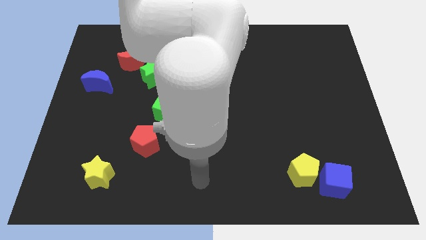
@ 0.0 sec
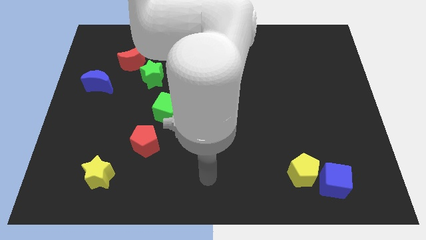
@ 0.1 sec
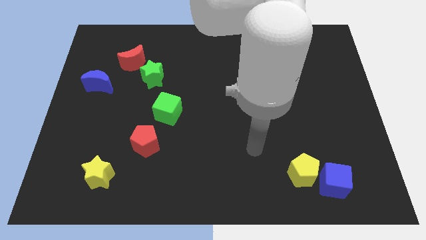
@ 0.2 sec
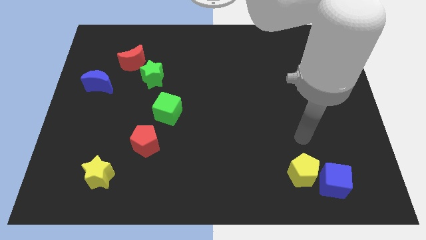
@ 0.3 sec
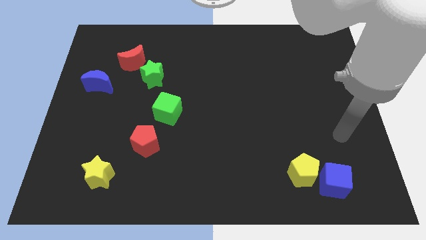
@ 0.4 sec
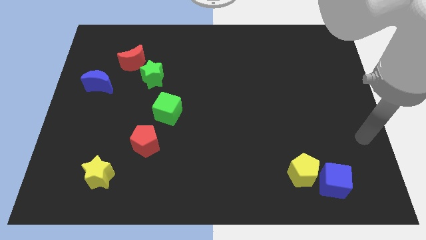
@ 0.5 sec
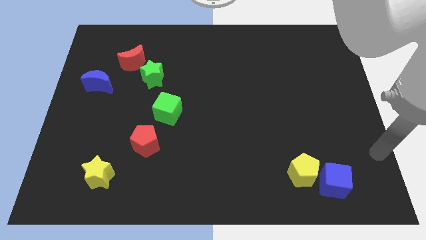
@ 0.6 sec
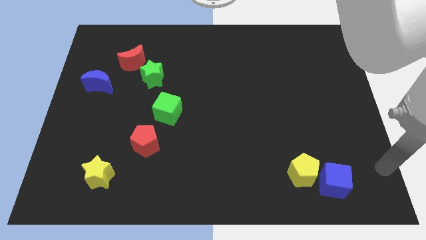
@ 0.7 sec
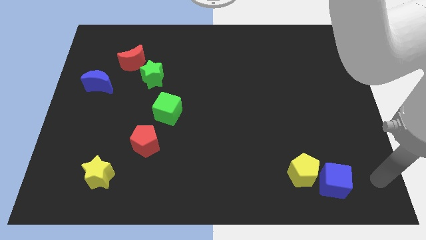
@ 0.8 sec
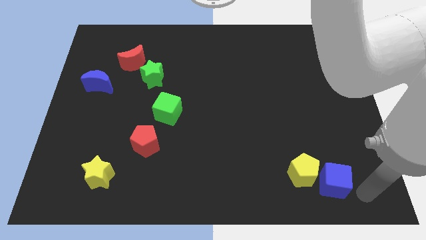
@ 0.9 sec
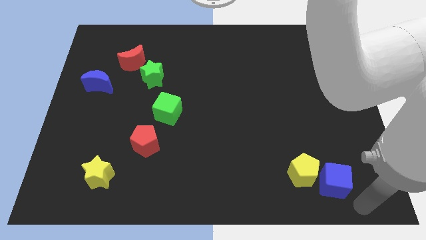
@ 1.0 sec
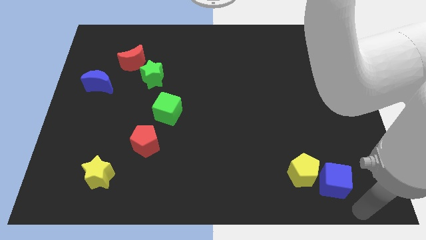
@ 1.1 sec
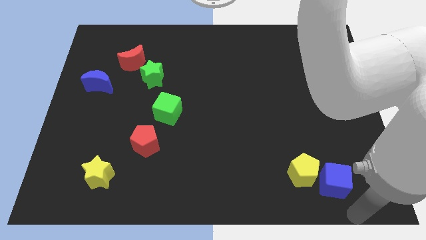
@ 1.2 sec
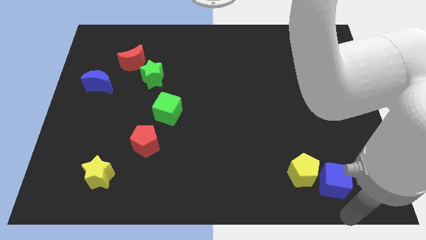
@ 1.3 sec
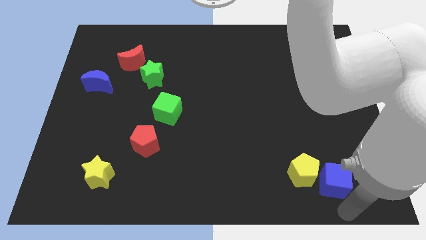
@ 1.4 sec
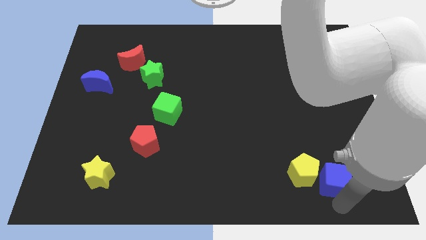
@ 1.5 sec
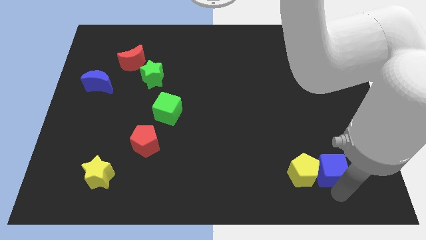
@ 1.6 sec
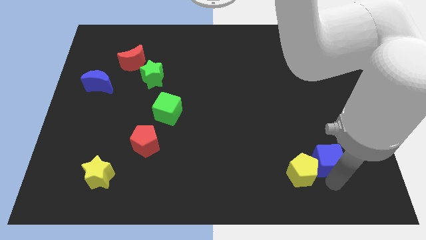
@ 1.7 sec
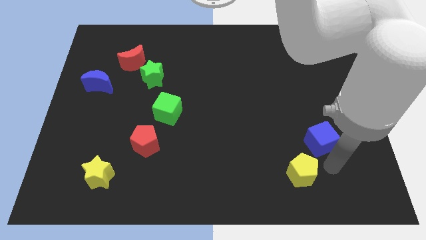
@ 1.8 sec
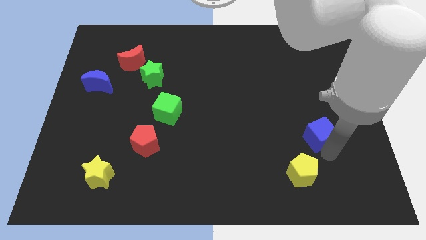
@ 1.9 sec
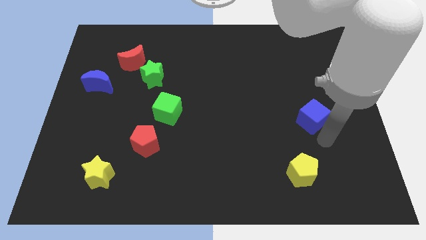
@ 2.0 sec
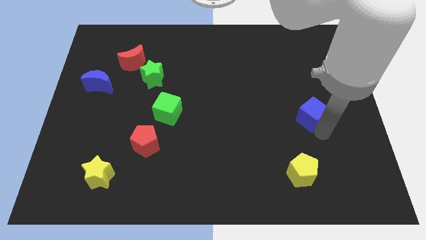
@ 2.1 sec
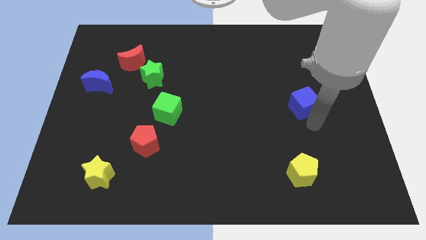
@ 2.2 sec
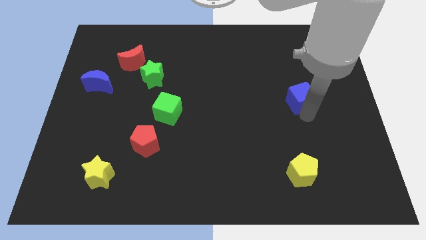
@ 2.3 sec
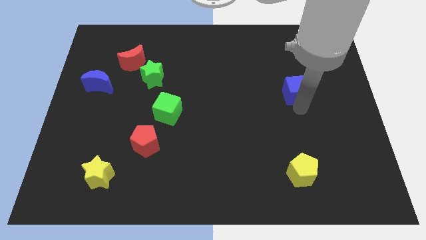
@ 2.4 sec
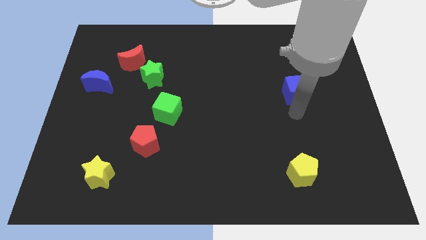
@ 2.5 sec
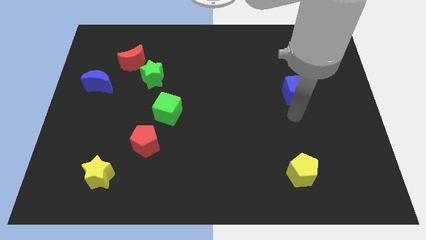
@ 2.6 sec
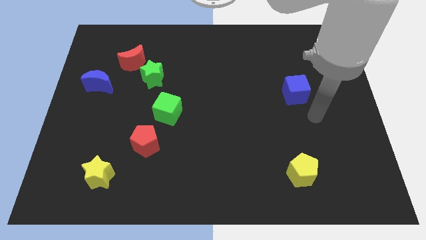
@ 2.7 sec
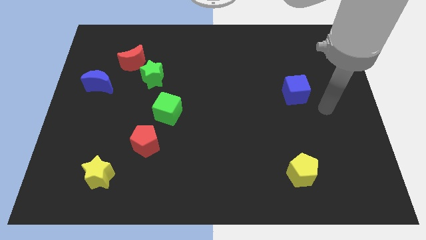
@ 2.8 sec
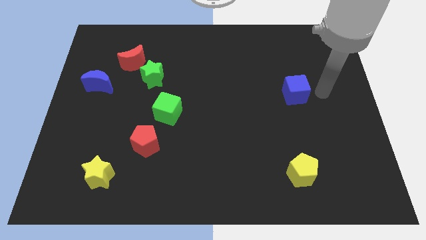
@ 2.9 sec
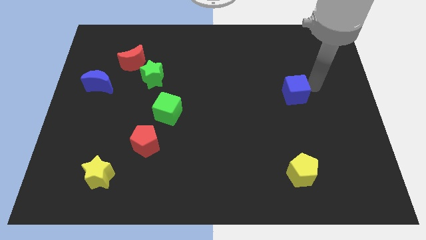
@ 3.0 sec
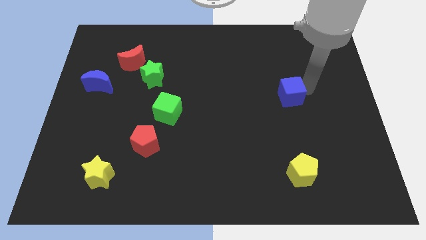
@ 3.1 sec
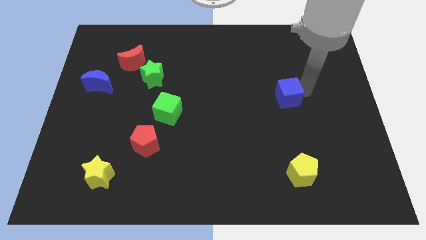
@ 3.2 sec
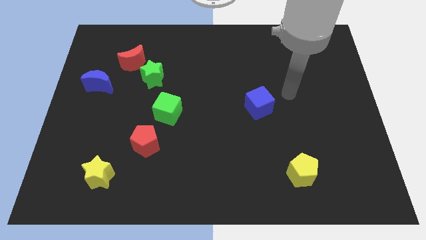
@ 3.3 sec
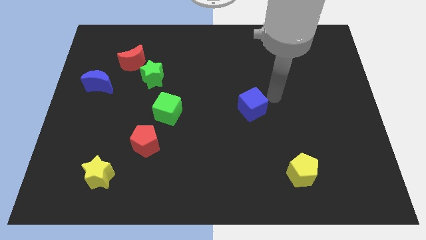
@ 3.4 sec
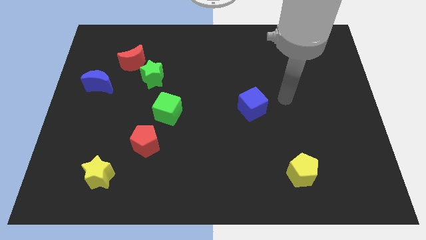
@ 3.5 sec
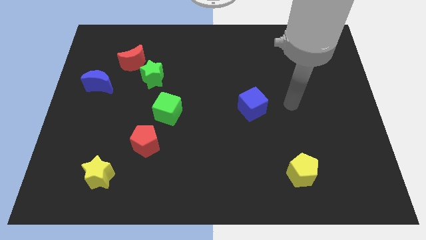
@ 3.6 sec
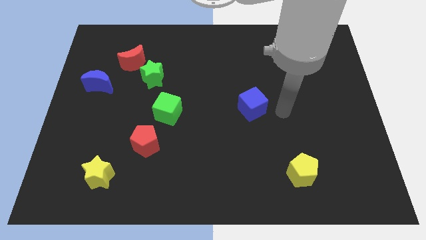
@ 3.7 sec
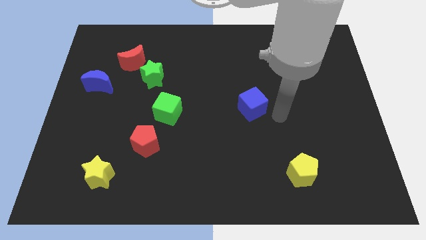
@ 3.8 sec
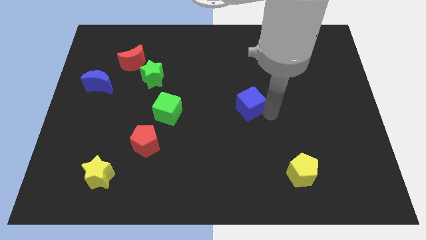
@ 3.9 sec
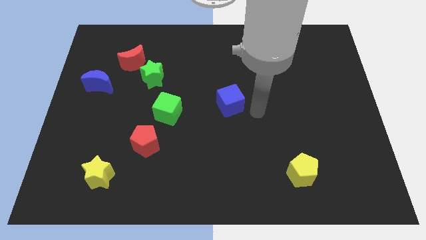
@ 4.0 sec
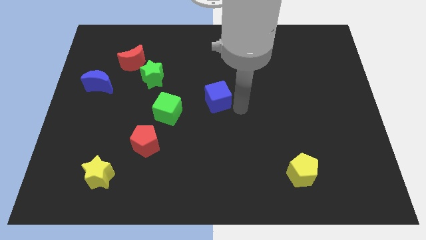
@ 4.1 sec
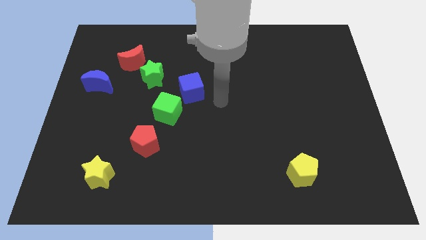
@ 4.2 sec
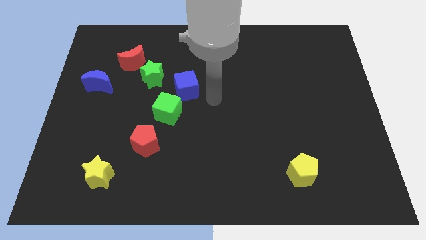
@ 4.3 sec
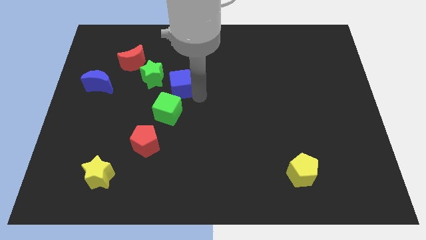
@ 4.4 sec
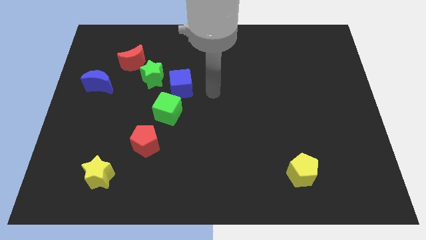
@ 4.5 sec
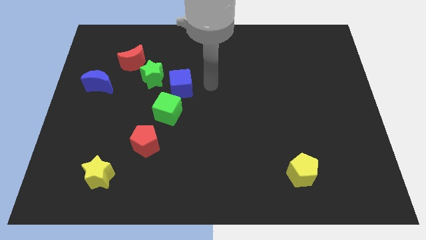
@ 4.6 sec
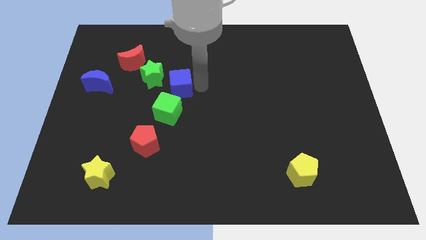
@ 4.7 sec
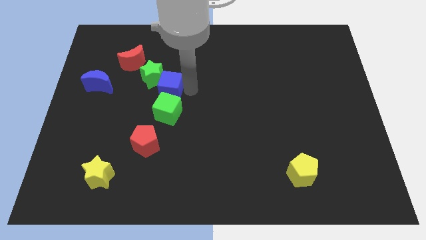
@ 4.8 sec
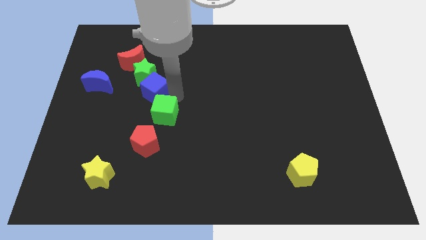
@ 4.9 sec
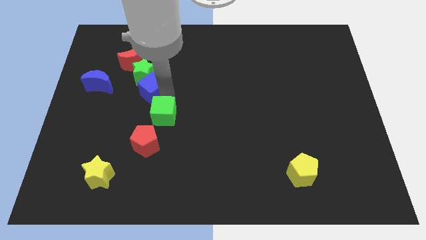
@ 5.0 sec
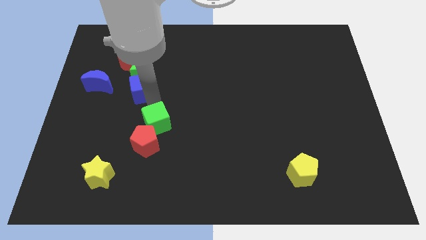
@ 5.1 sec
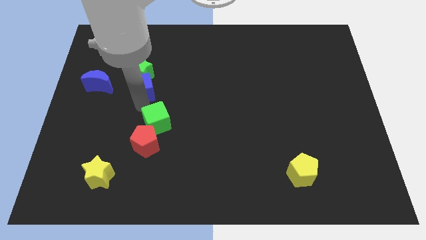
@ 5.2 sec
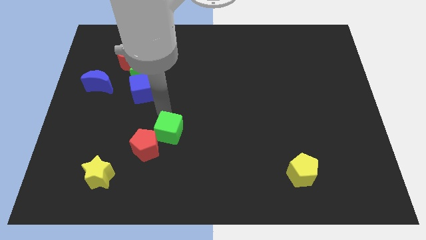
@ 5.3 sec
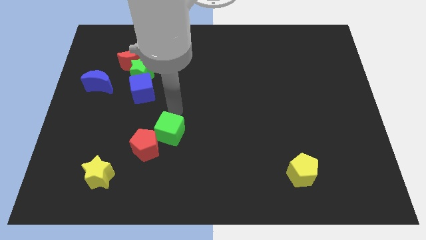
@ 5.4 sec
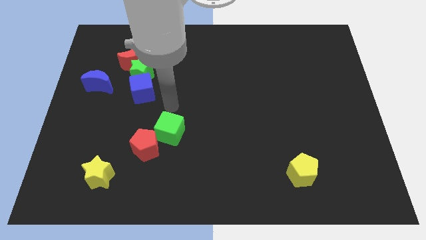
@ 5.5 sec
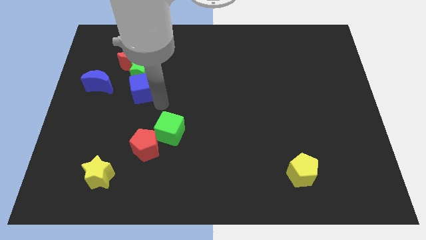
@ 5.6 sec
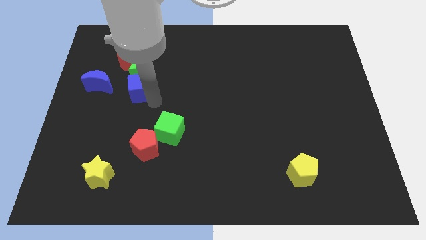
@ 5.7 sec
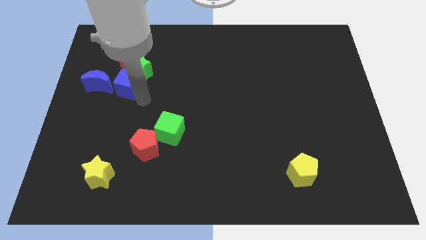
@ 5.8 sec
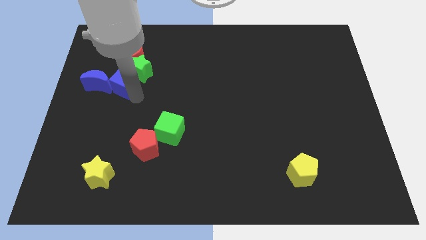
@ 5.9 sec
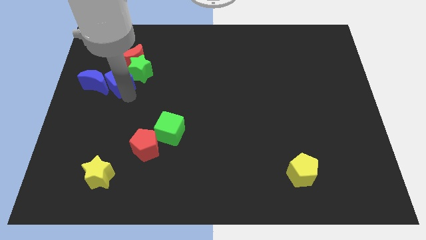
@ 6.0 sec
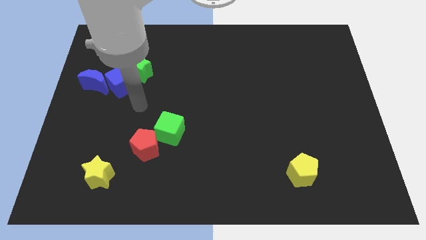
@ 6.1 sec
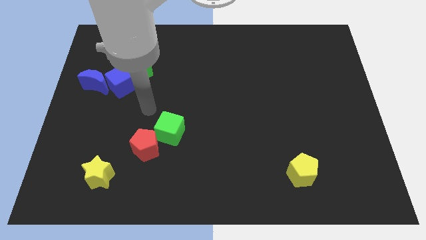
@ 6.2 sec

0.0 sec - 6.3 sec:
put the blue cube towards the blue moon

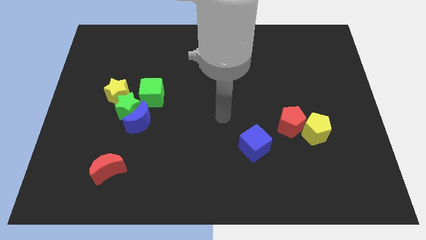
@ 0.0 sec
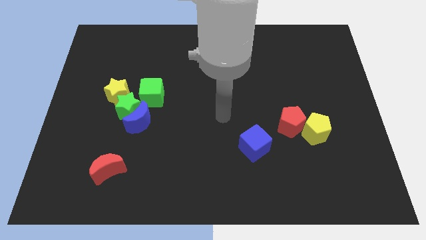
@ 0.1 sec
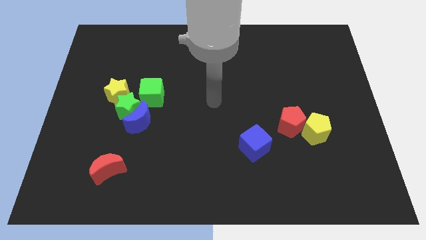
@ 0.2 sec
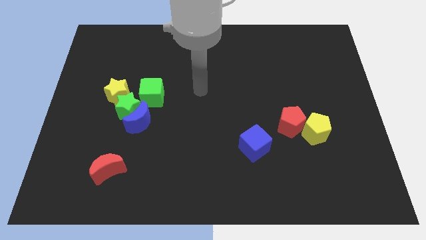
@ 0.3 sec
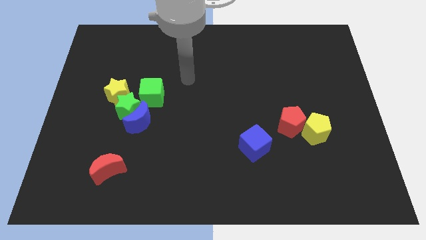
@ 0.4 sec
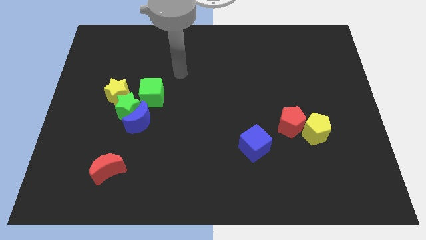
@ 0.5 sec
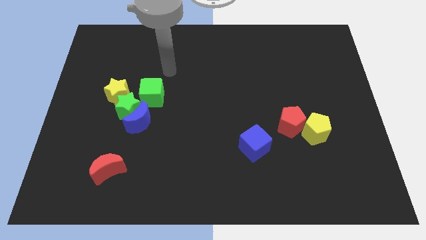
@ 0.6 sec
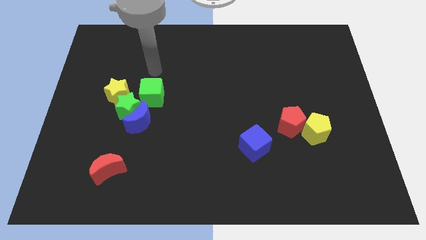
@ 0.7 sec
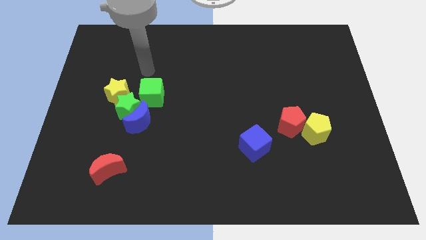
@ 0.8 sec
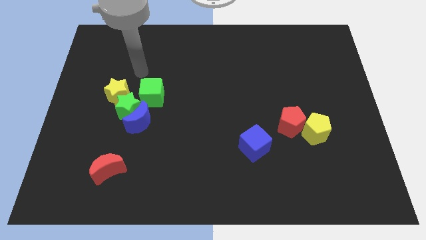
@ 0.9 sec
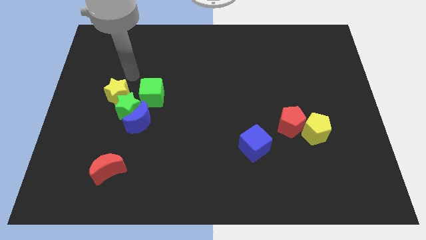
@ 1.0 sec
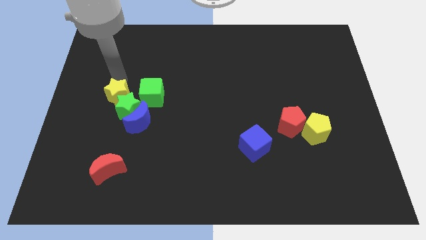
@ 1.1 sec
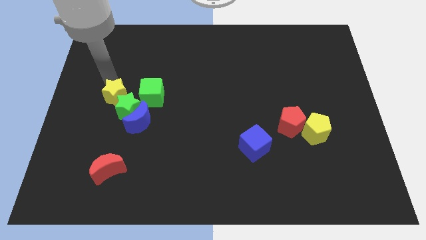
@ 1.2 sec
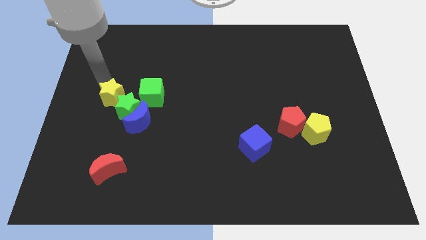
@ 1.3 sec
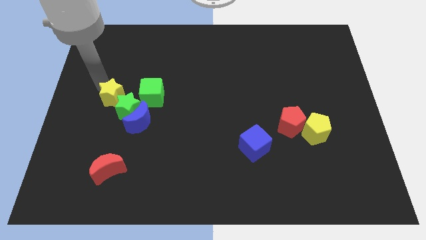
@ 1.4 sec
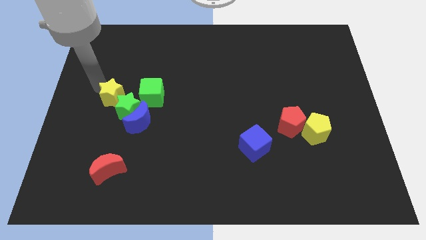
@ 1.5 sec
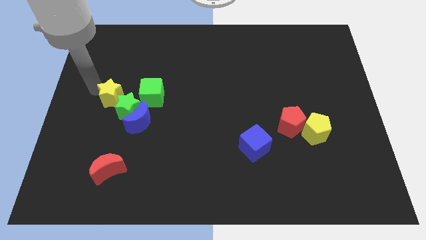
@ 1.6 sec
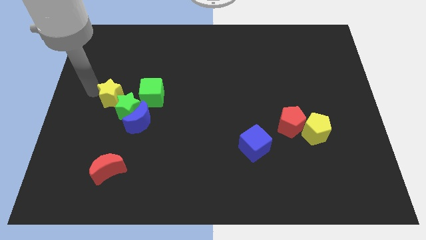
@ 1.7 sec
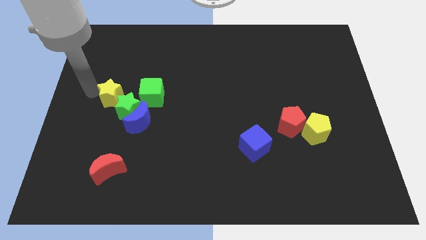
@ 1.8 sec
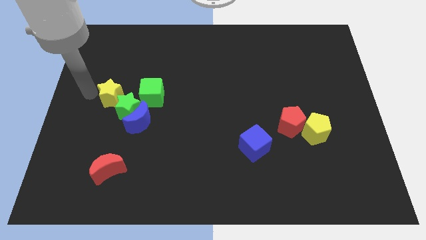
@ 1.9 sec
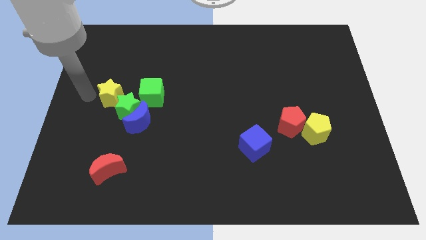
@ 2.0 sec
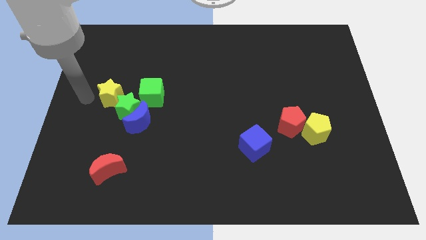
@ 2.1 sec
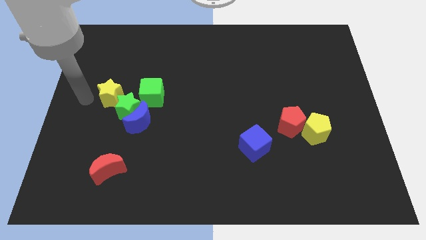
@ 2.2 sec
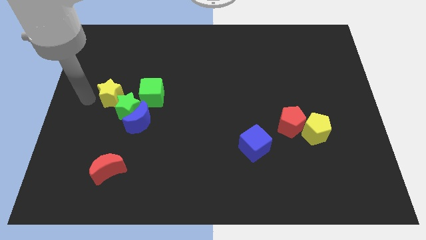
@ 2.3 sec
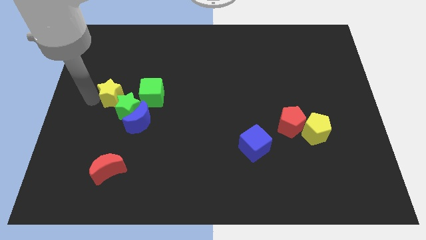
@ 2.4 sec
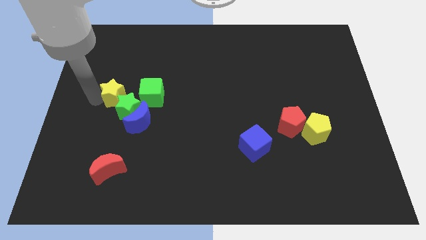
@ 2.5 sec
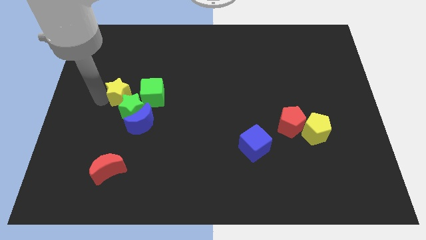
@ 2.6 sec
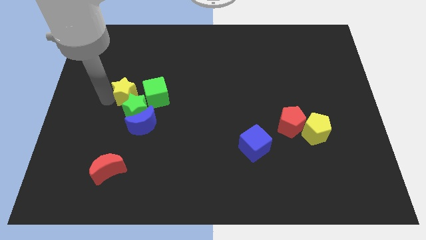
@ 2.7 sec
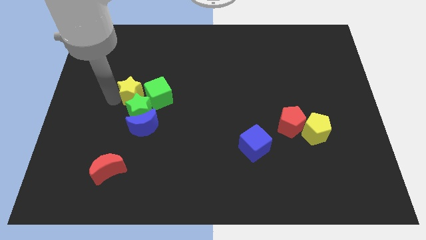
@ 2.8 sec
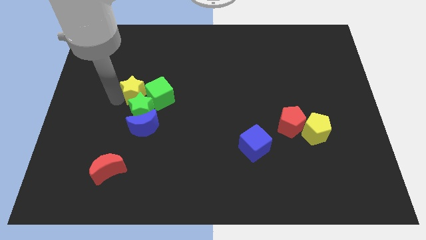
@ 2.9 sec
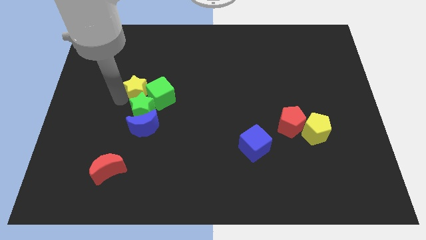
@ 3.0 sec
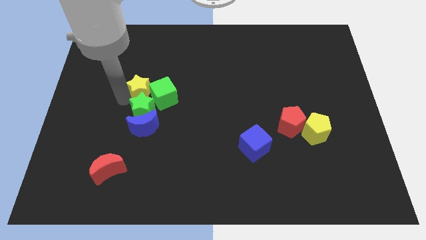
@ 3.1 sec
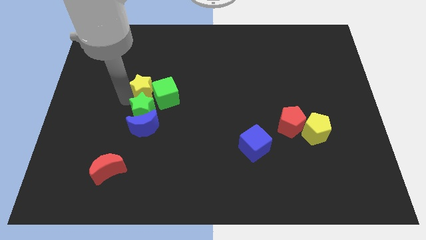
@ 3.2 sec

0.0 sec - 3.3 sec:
push the yellow star next to the green cube
